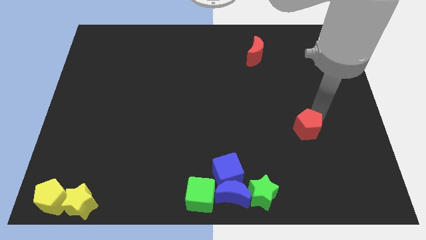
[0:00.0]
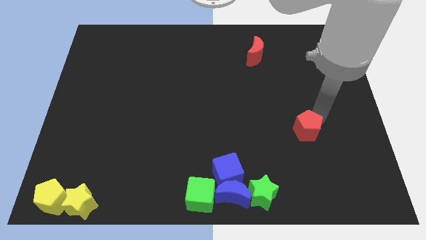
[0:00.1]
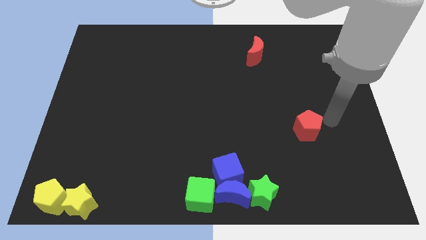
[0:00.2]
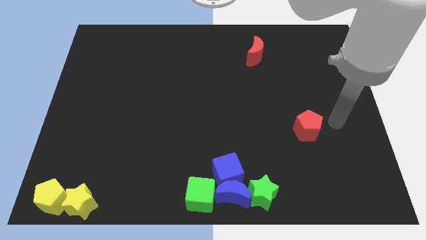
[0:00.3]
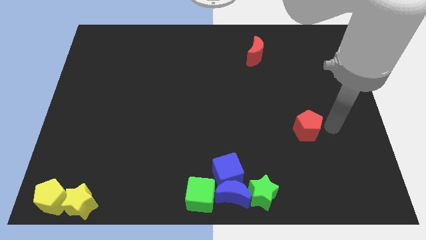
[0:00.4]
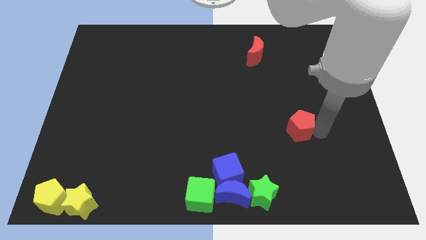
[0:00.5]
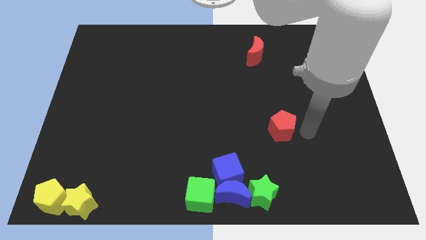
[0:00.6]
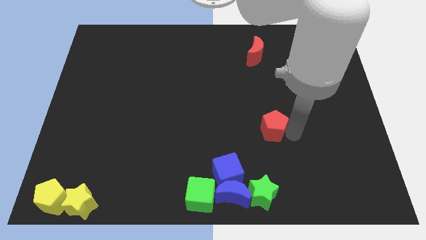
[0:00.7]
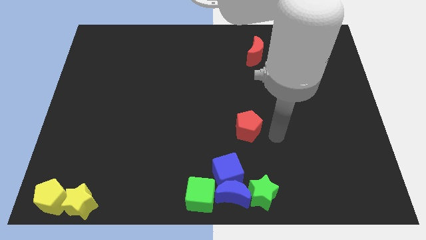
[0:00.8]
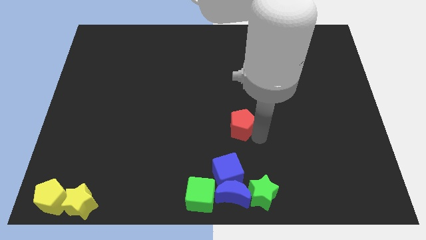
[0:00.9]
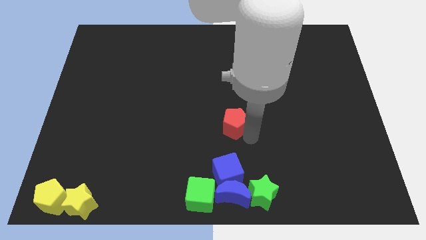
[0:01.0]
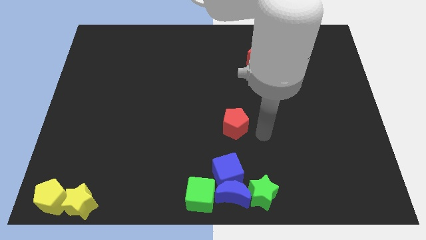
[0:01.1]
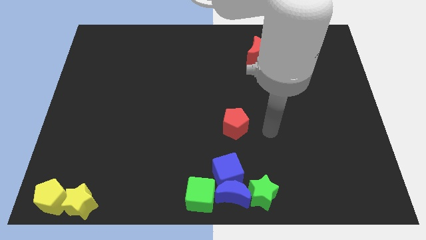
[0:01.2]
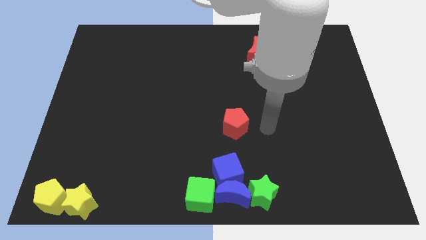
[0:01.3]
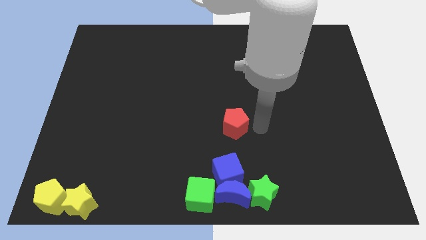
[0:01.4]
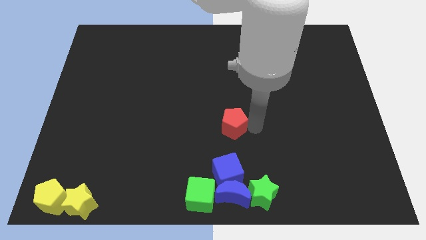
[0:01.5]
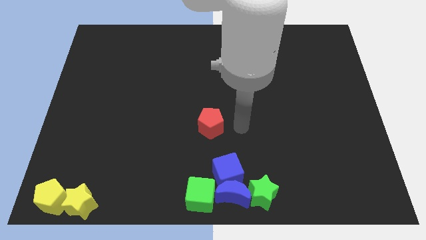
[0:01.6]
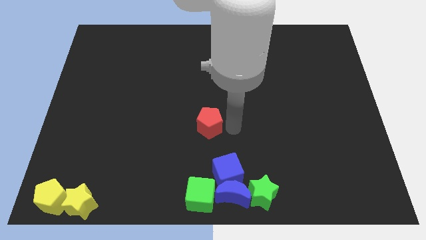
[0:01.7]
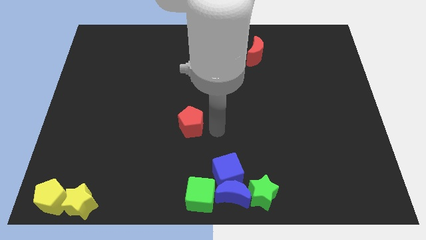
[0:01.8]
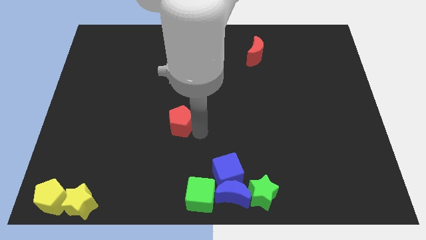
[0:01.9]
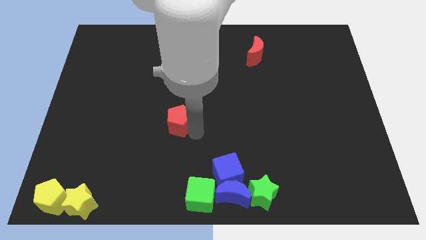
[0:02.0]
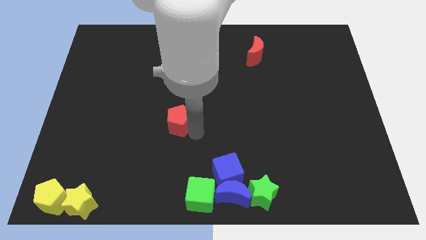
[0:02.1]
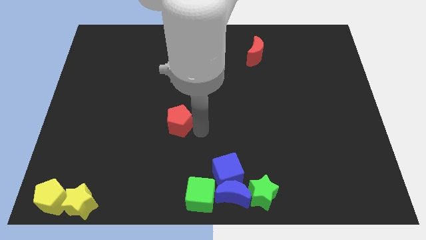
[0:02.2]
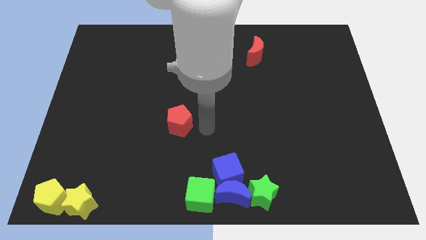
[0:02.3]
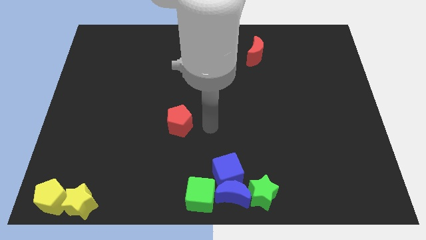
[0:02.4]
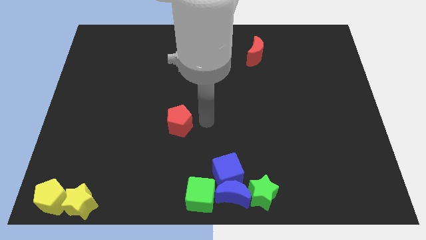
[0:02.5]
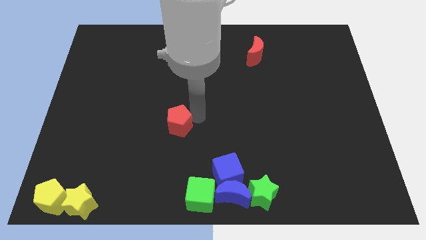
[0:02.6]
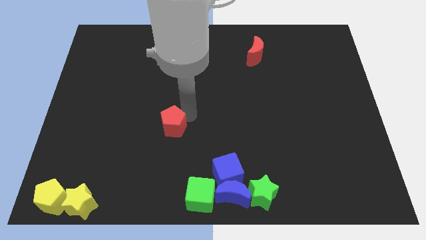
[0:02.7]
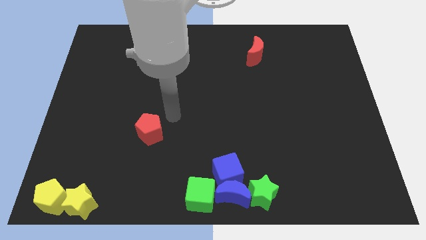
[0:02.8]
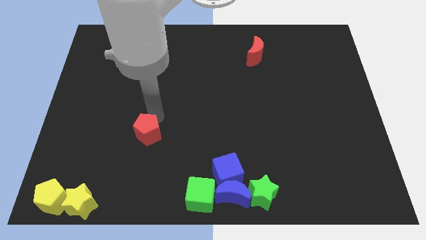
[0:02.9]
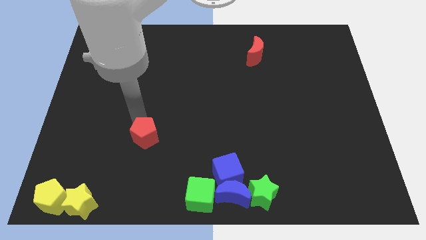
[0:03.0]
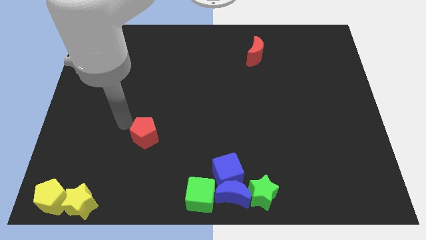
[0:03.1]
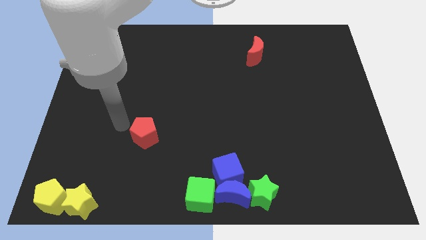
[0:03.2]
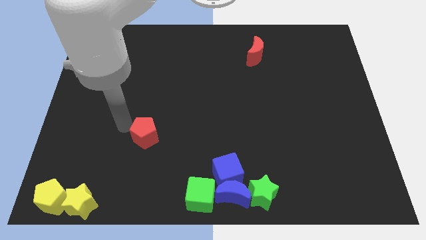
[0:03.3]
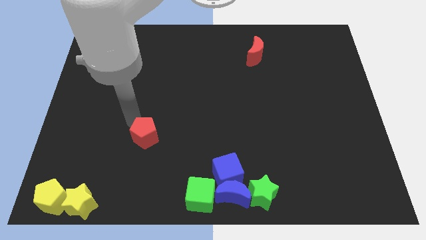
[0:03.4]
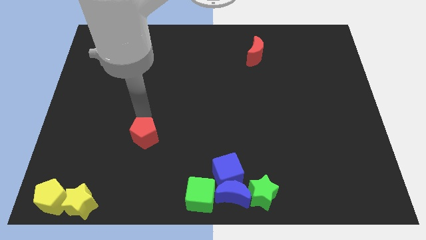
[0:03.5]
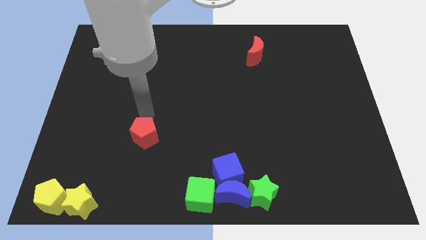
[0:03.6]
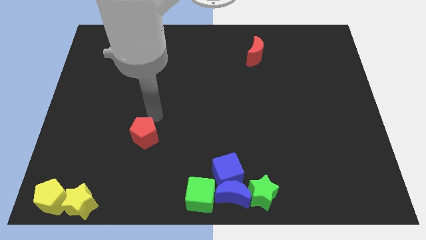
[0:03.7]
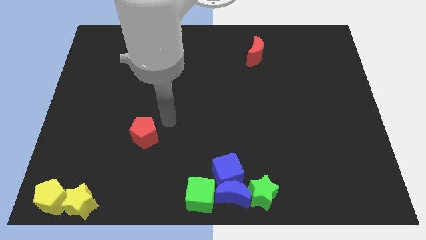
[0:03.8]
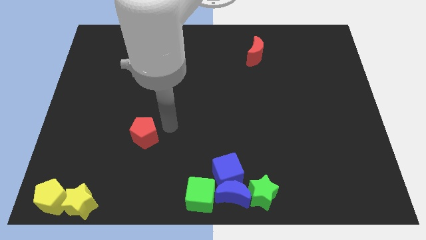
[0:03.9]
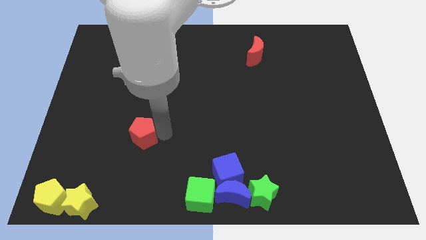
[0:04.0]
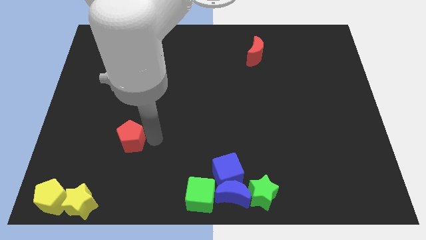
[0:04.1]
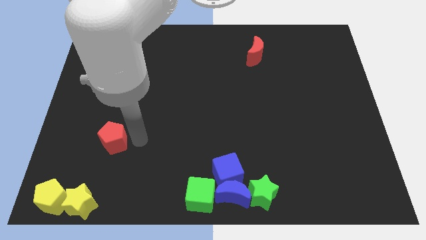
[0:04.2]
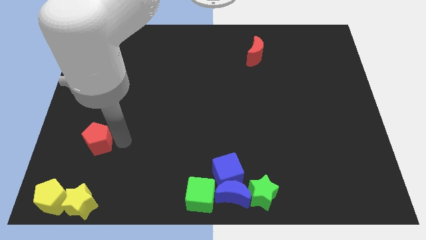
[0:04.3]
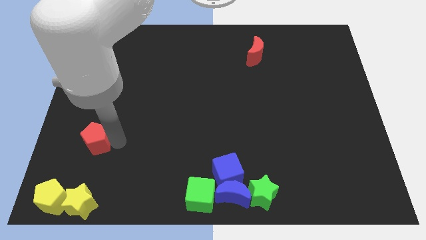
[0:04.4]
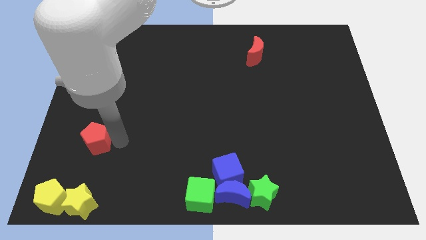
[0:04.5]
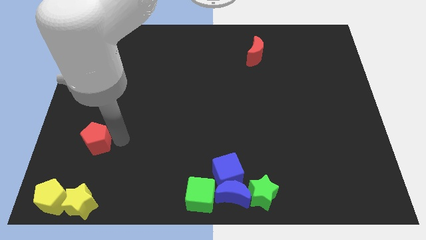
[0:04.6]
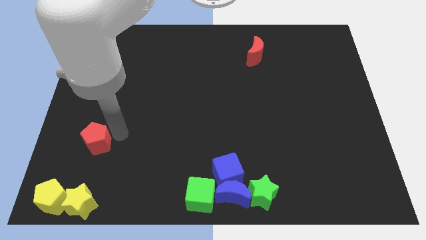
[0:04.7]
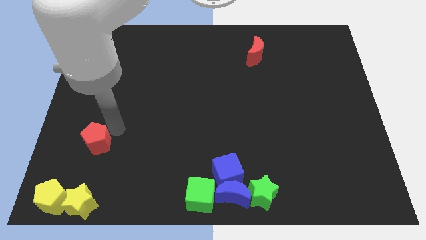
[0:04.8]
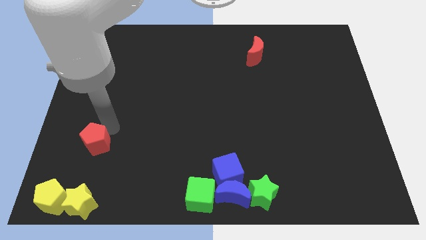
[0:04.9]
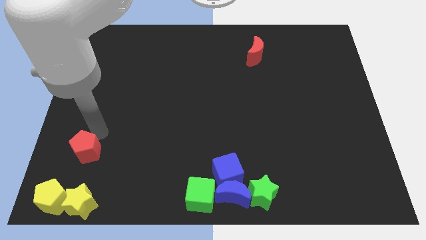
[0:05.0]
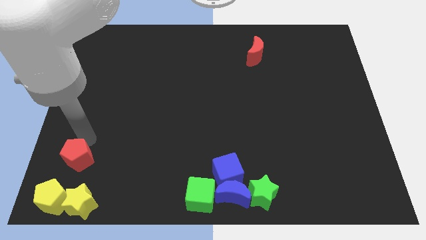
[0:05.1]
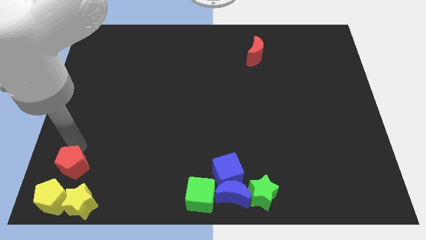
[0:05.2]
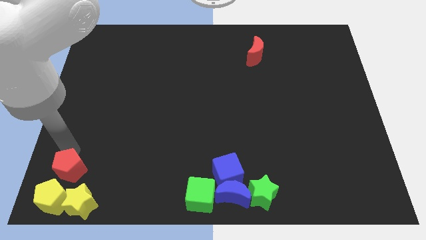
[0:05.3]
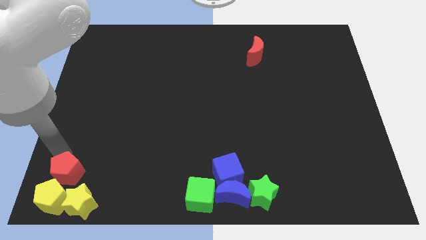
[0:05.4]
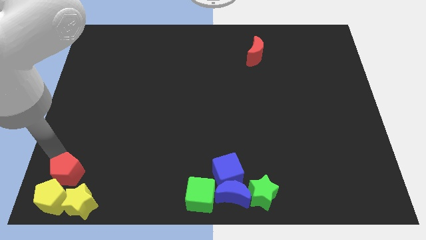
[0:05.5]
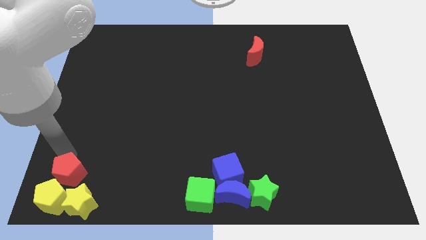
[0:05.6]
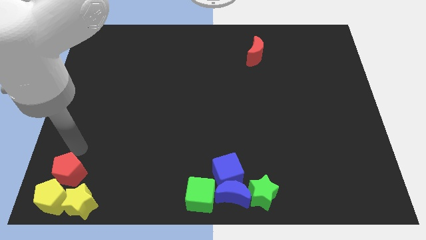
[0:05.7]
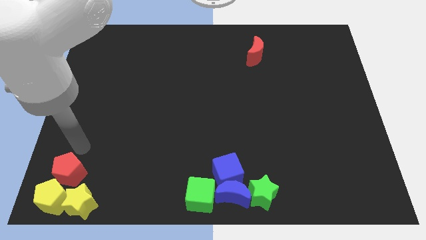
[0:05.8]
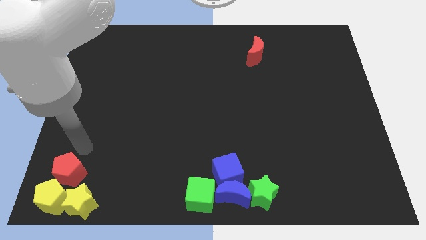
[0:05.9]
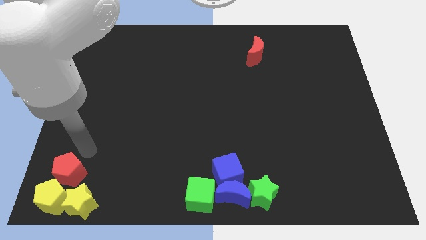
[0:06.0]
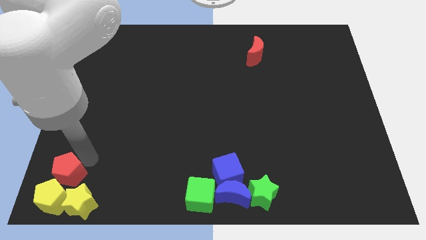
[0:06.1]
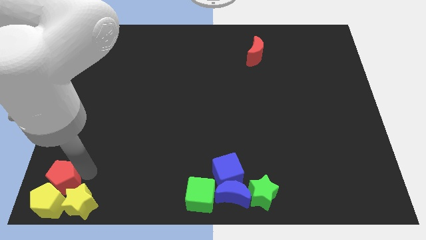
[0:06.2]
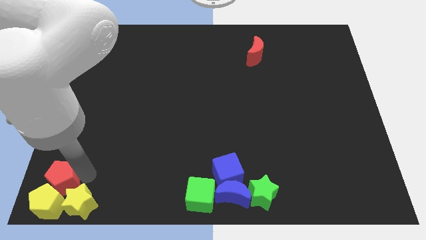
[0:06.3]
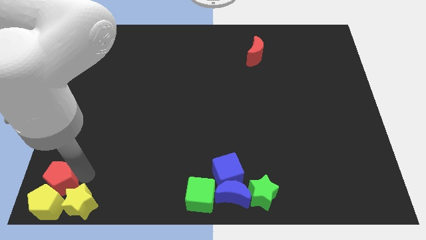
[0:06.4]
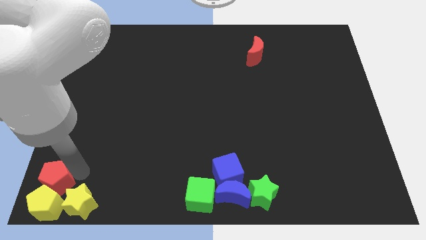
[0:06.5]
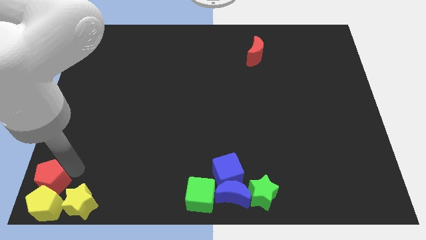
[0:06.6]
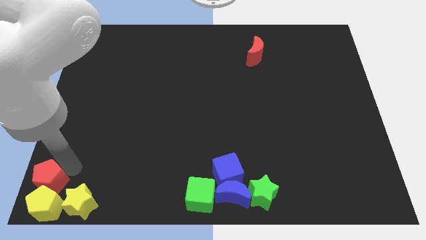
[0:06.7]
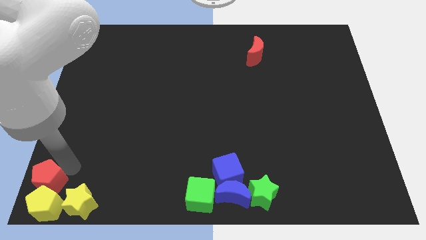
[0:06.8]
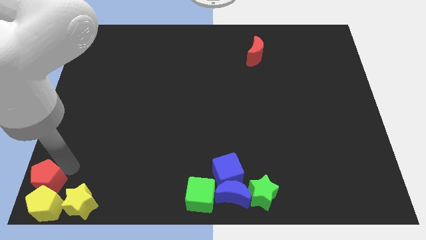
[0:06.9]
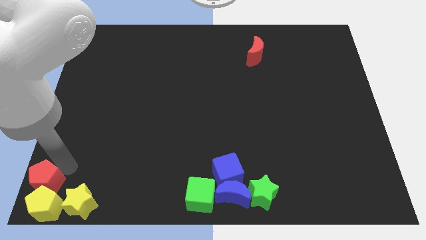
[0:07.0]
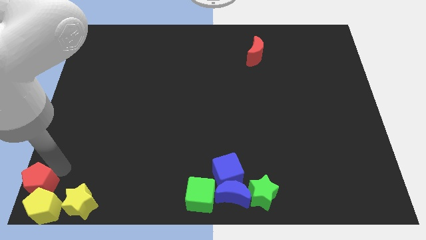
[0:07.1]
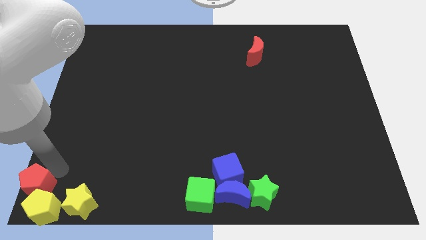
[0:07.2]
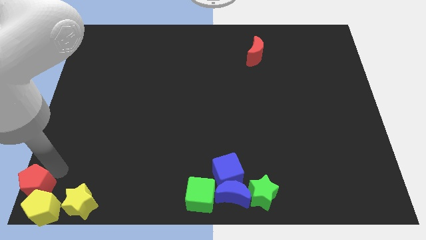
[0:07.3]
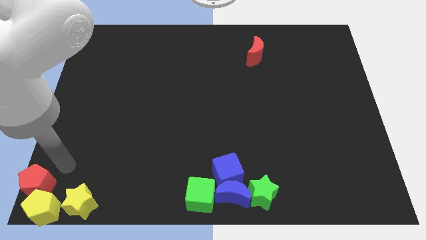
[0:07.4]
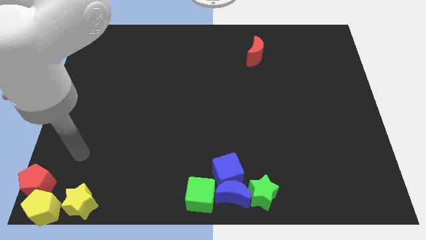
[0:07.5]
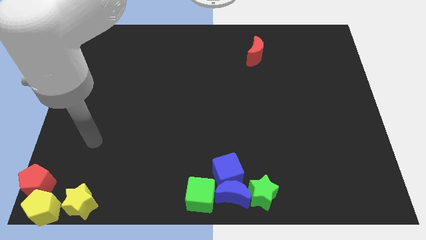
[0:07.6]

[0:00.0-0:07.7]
push the red pentagon to the bottom left of the board

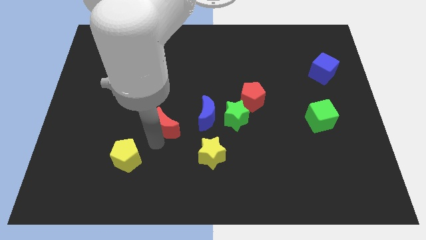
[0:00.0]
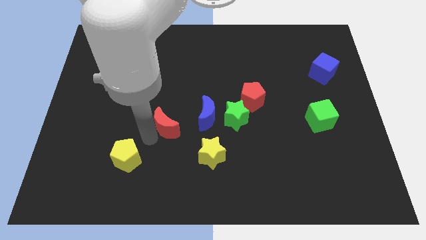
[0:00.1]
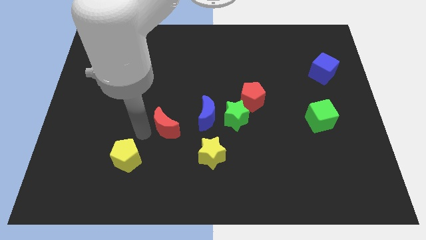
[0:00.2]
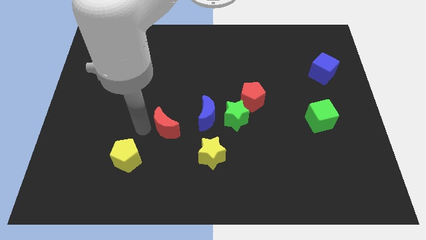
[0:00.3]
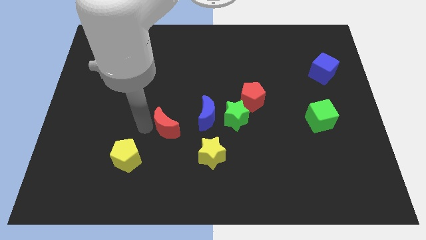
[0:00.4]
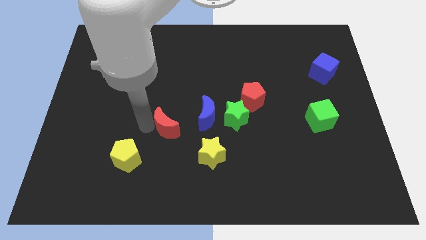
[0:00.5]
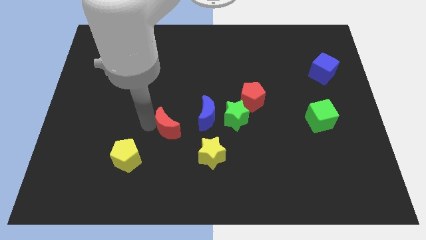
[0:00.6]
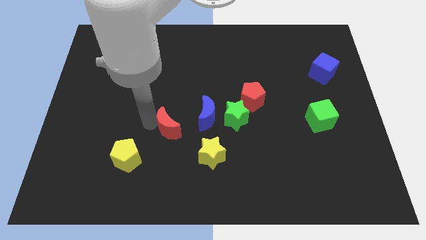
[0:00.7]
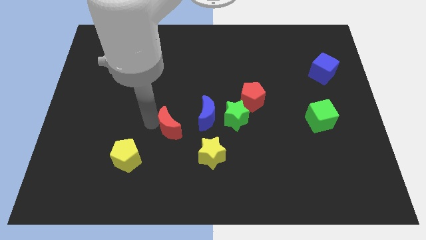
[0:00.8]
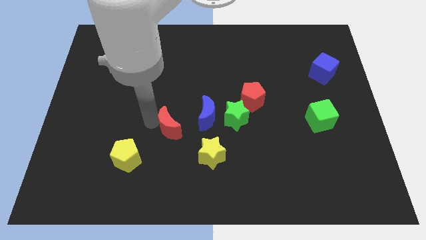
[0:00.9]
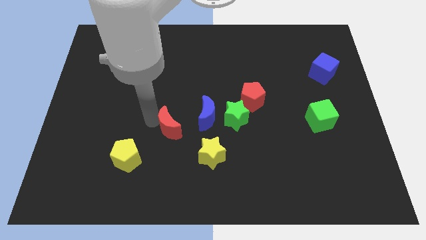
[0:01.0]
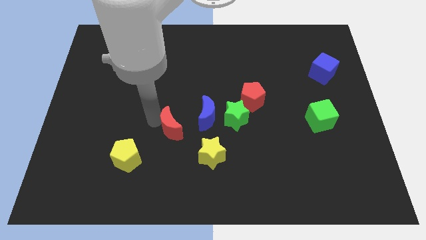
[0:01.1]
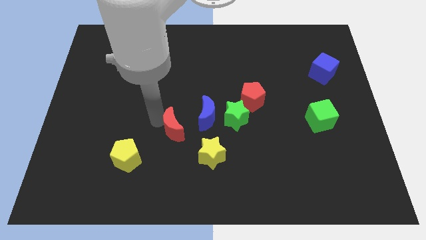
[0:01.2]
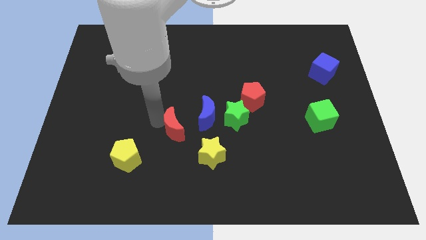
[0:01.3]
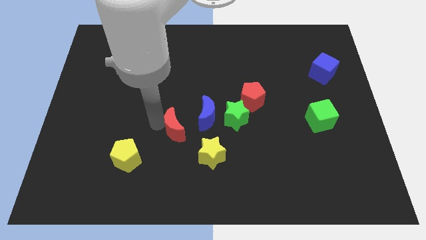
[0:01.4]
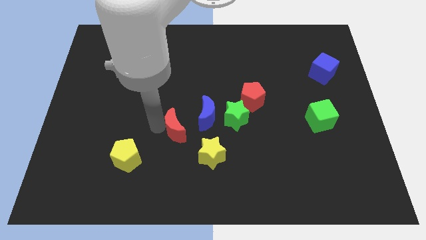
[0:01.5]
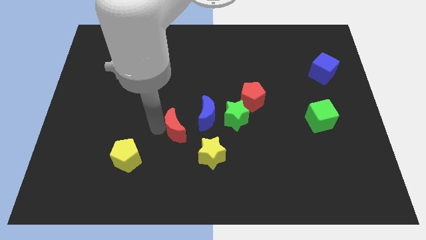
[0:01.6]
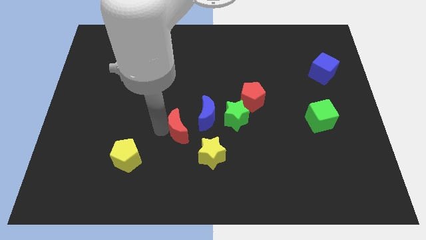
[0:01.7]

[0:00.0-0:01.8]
push the red crescent towards the yellow star
